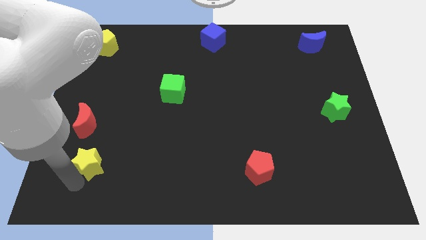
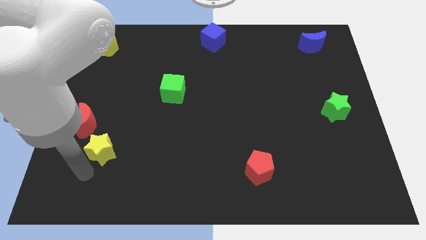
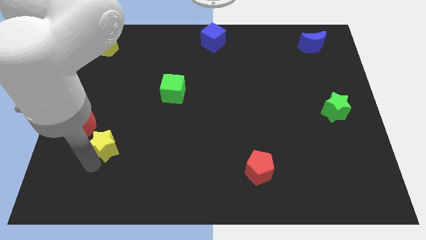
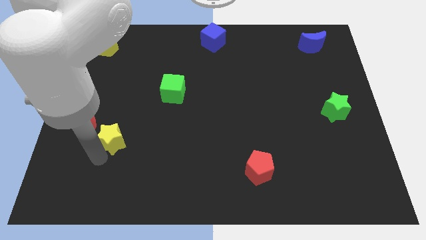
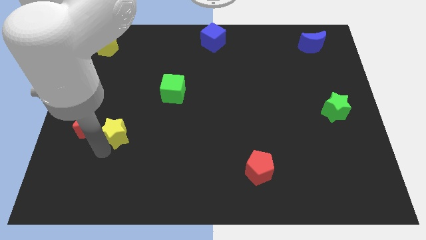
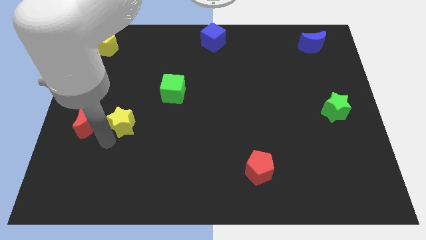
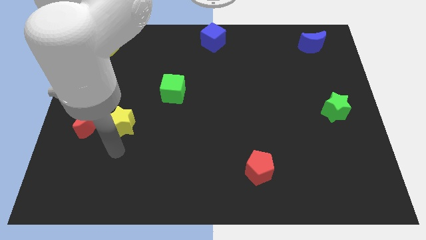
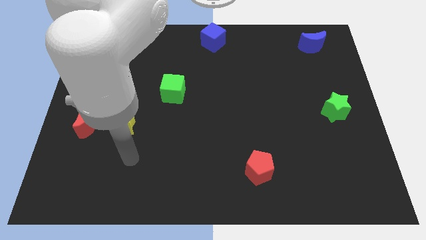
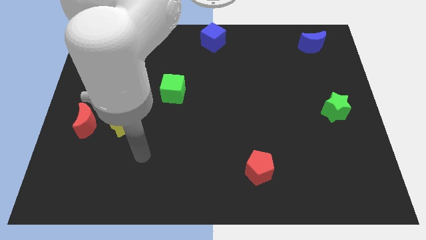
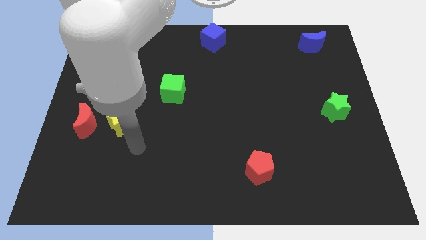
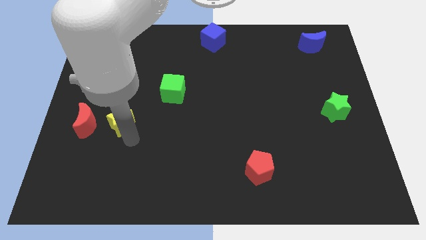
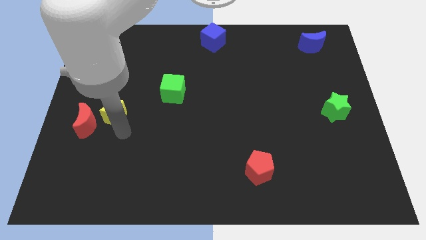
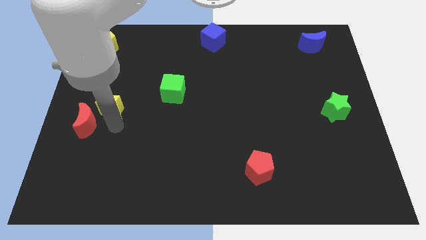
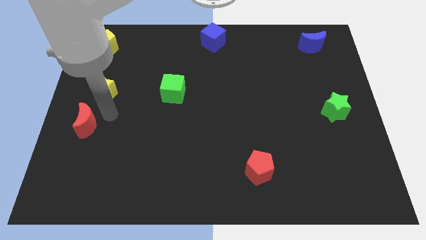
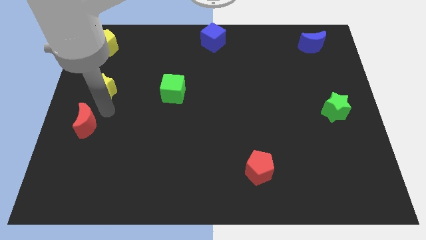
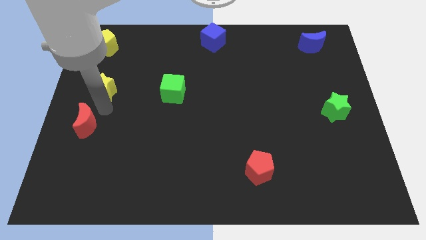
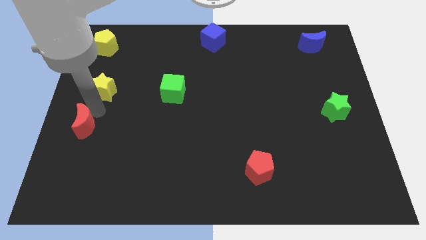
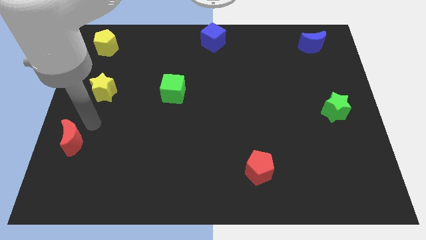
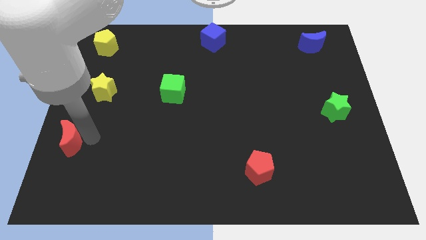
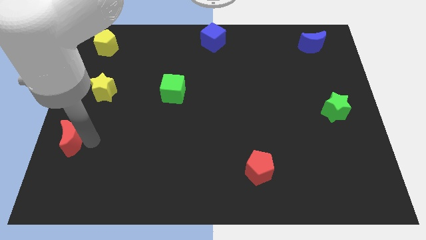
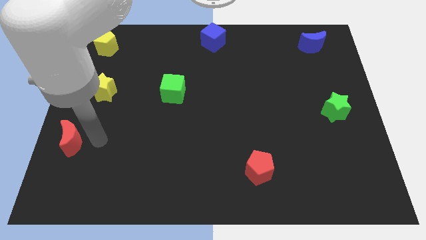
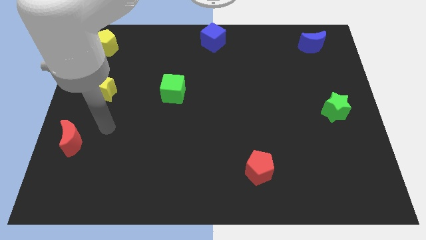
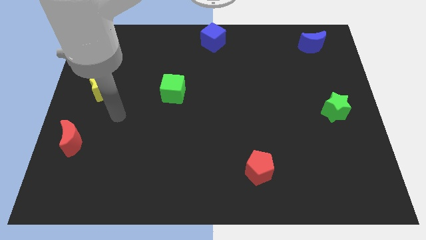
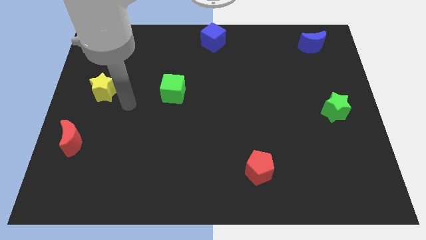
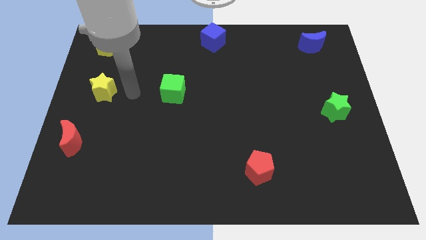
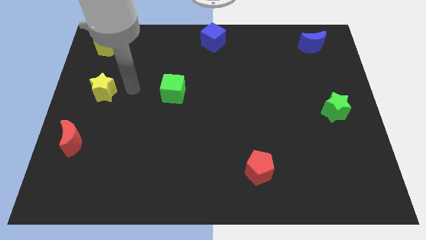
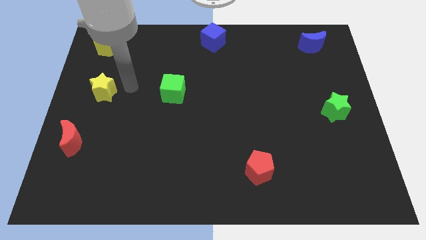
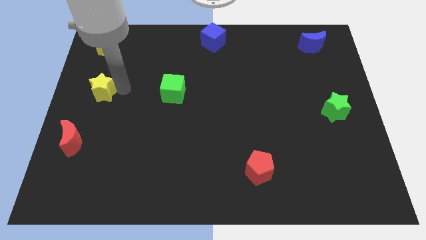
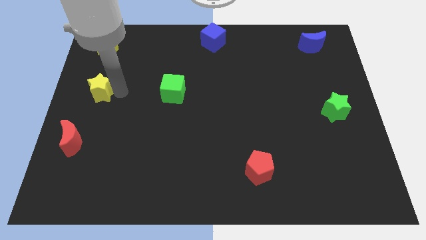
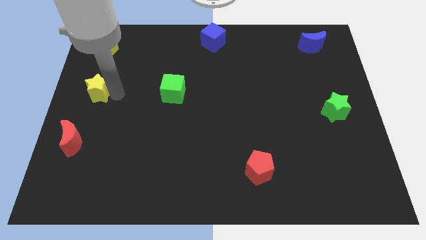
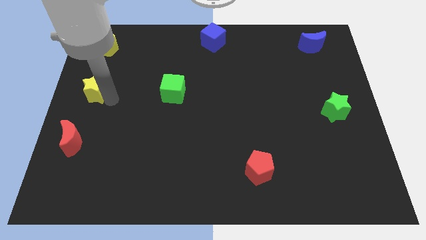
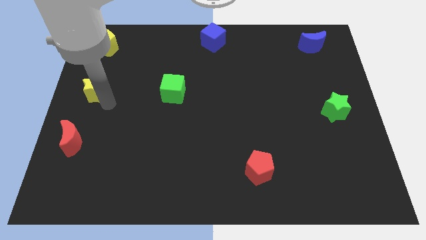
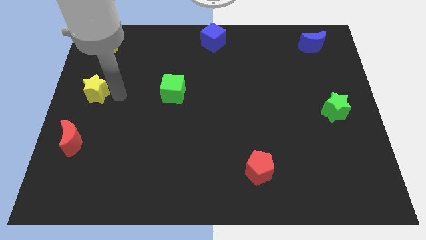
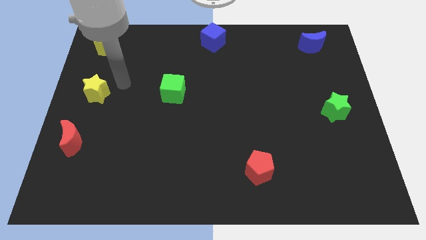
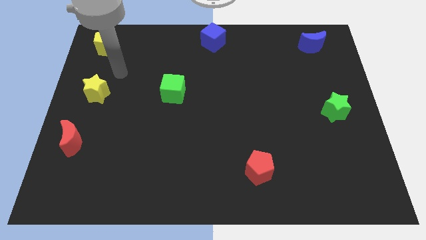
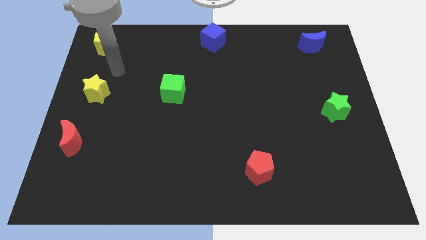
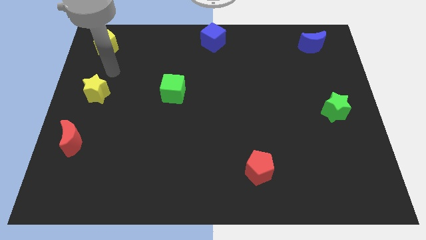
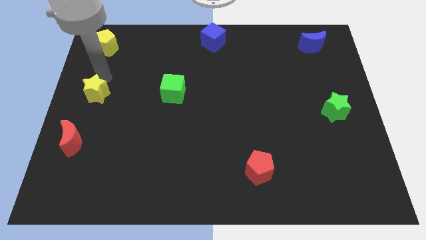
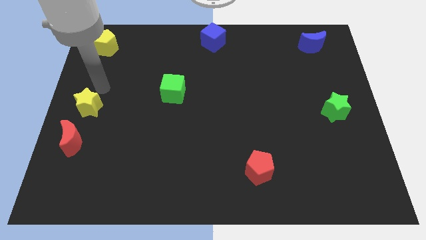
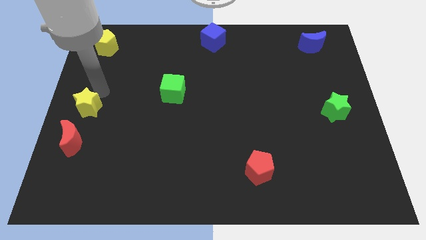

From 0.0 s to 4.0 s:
move yellow star above the red moon

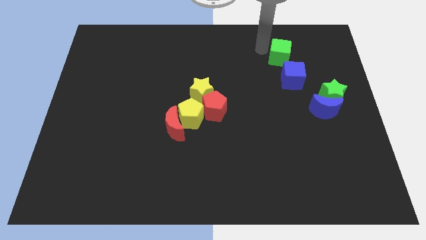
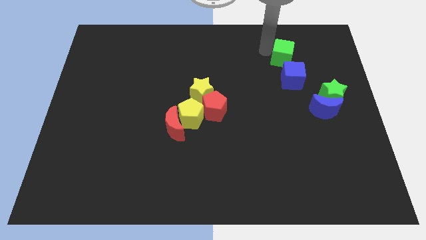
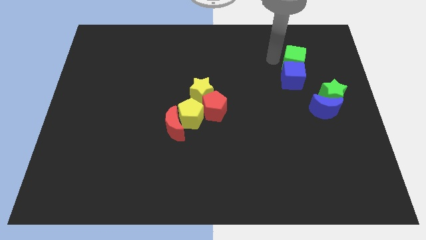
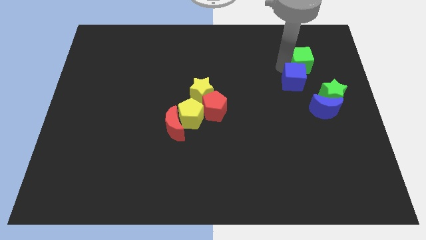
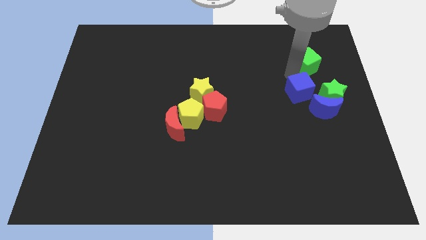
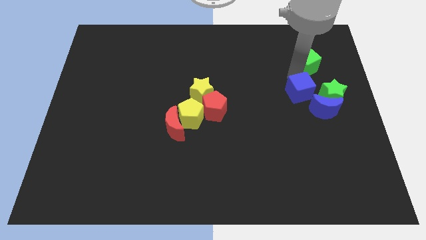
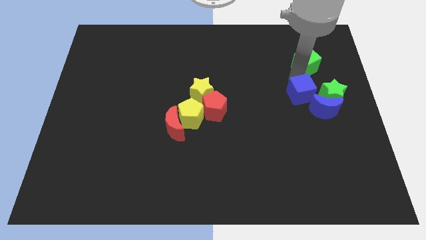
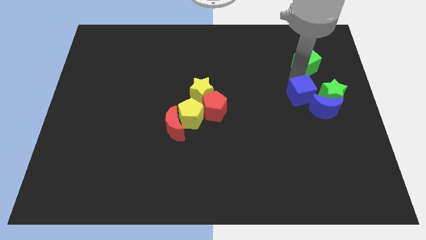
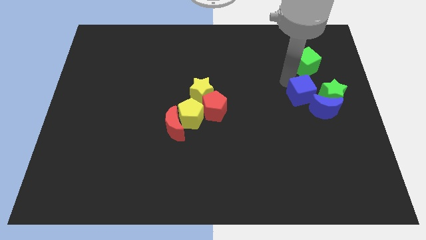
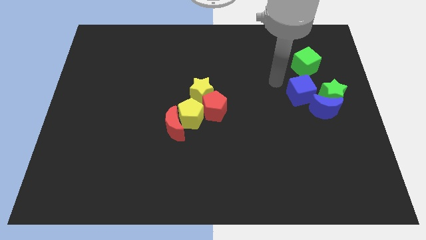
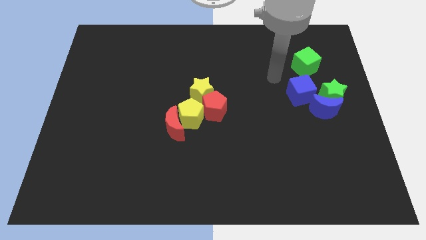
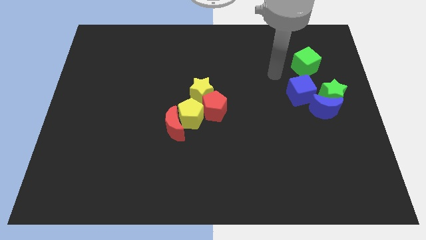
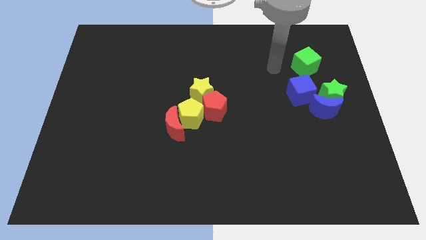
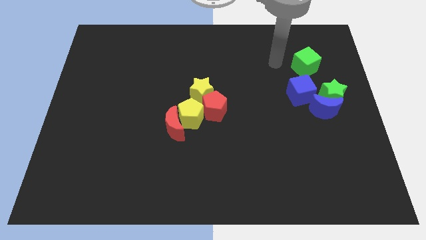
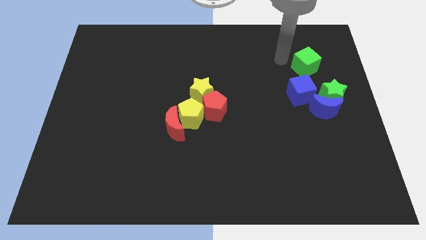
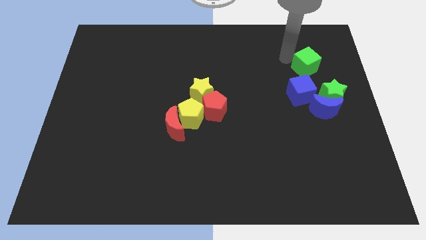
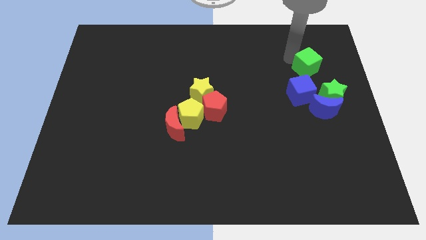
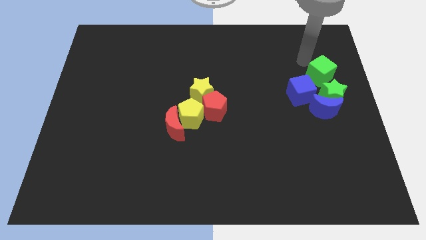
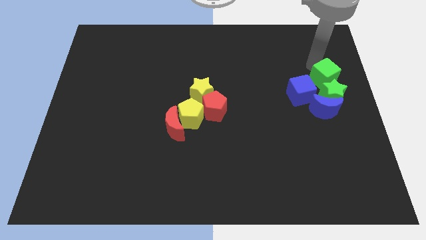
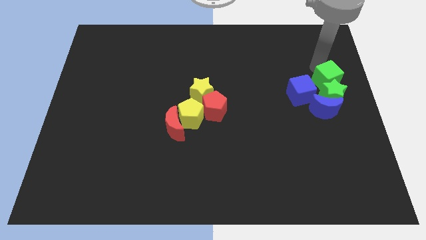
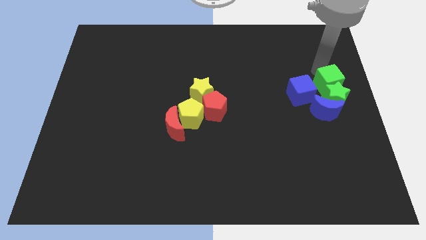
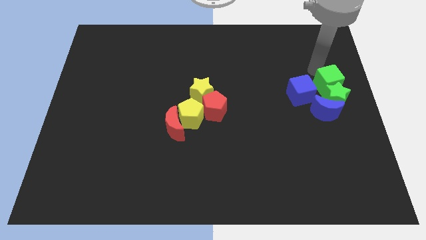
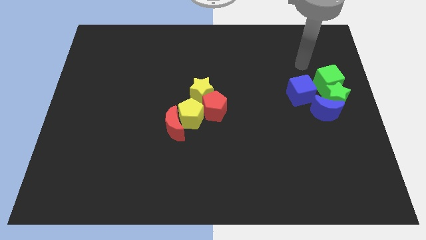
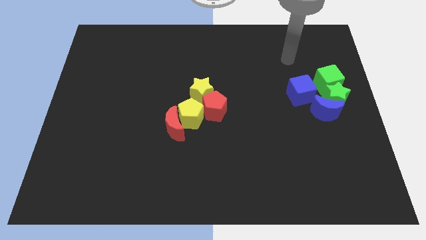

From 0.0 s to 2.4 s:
push the green cube towards the green star

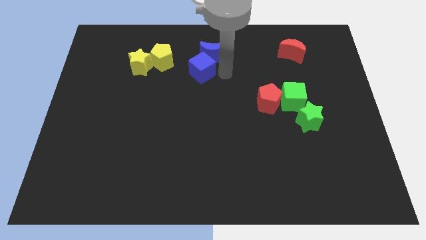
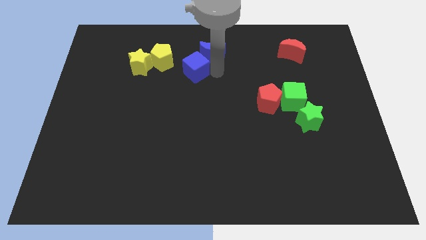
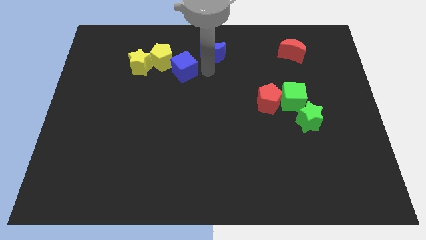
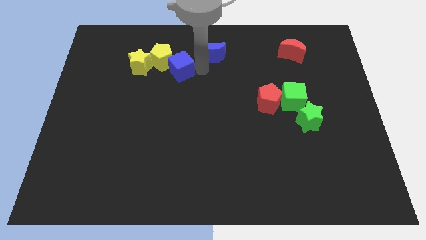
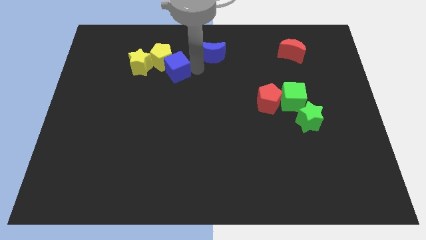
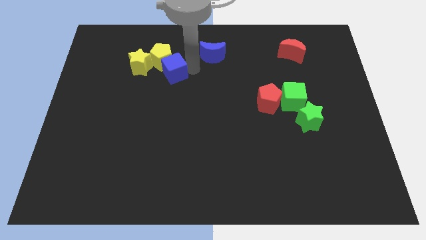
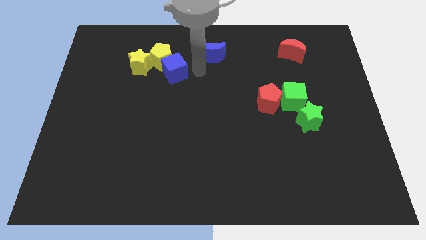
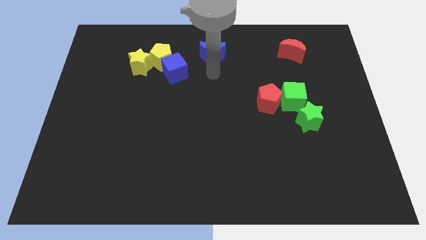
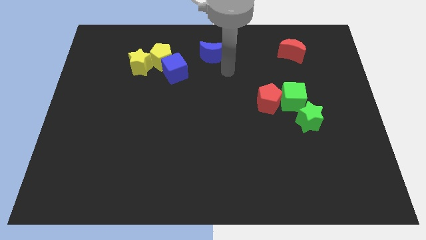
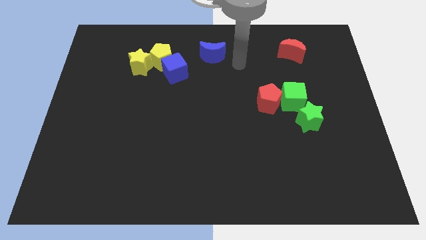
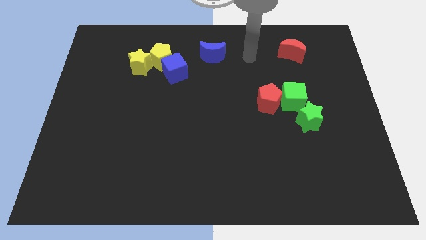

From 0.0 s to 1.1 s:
push the blue cube into the yellow pentagon

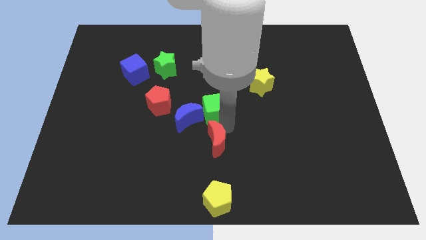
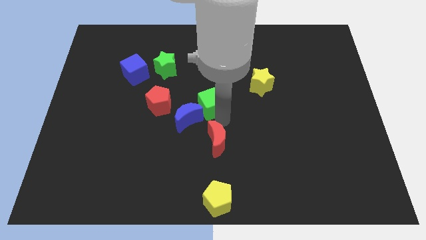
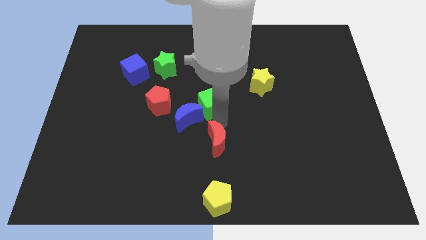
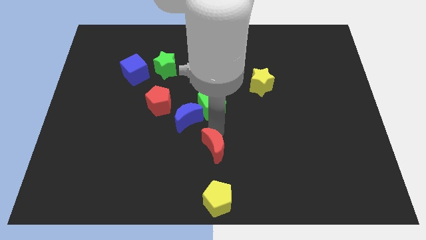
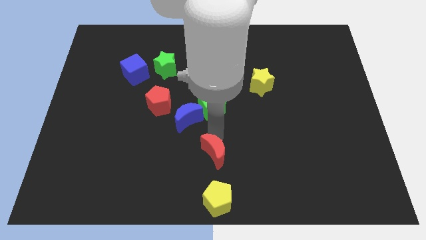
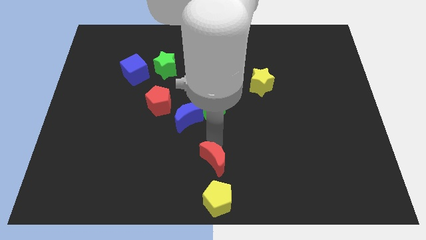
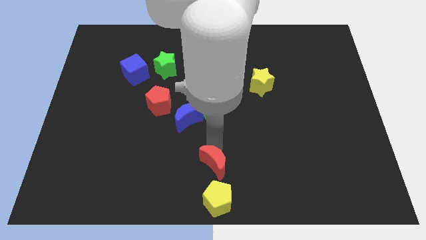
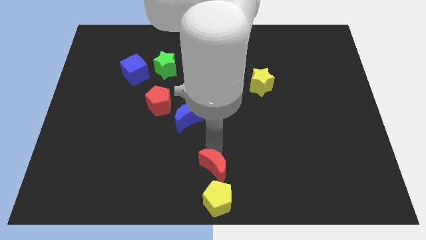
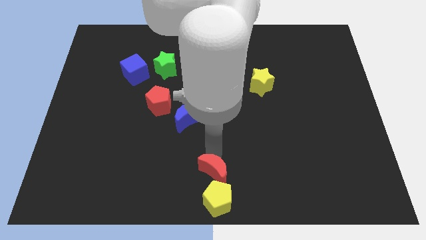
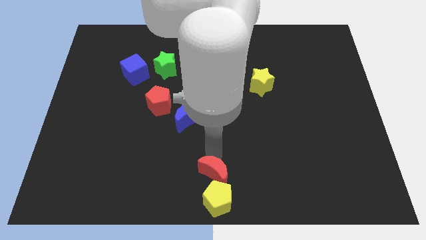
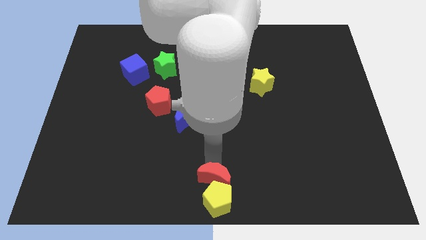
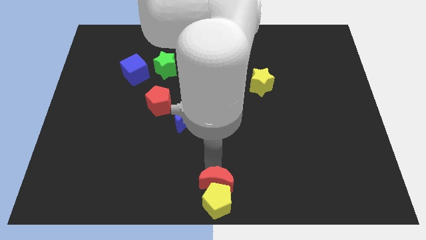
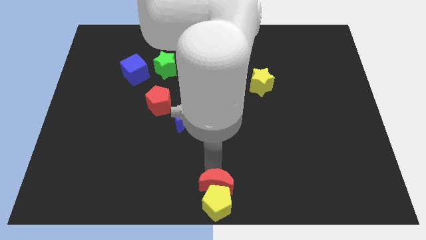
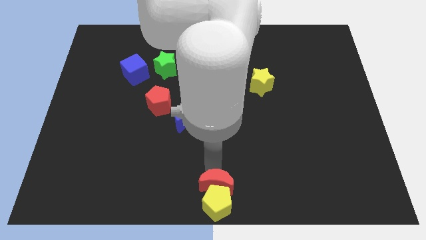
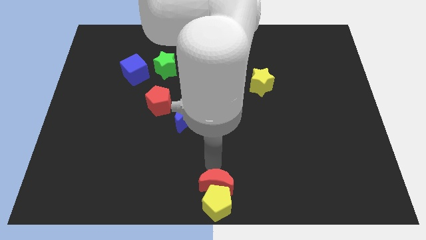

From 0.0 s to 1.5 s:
push the red crescent into the yellow pentagon
